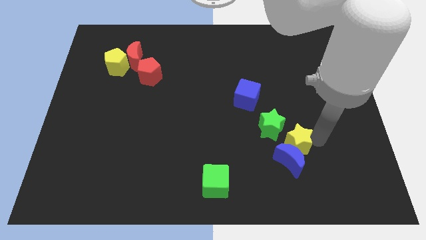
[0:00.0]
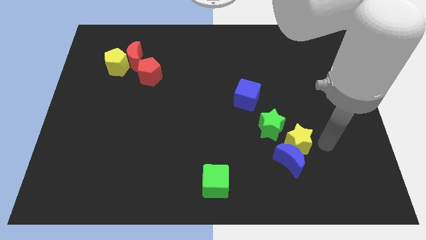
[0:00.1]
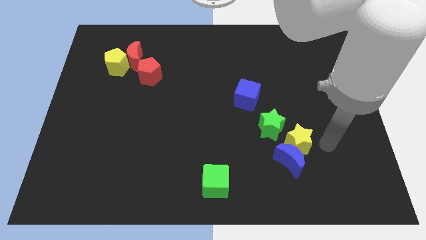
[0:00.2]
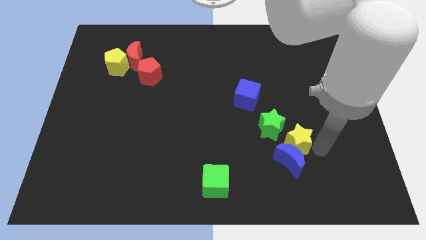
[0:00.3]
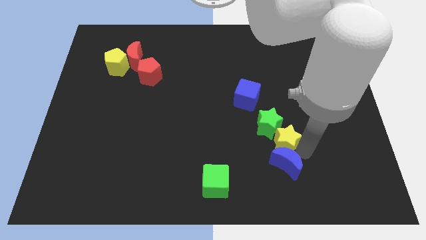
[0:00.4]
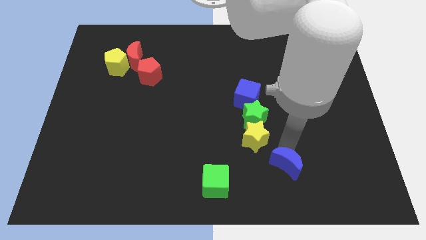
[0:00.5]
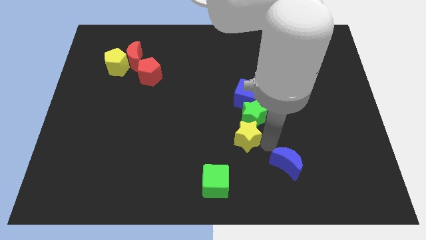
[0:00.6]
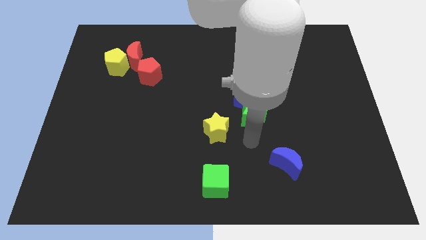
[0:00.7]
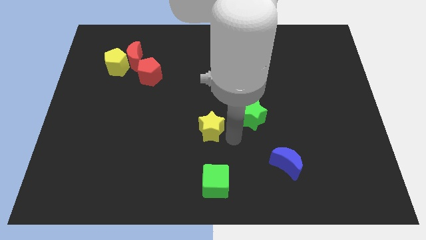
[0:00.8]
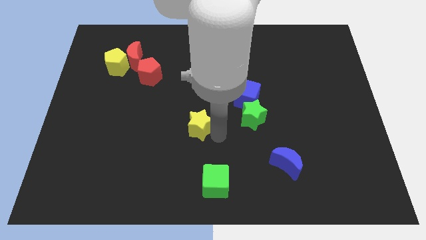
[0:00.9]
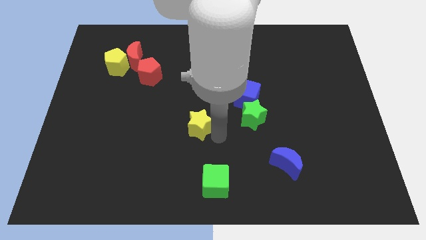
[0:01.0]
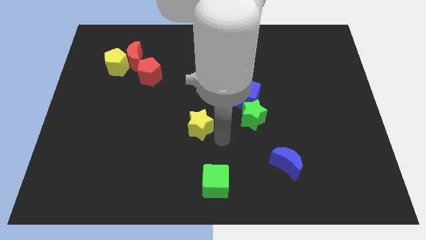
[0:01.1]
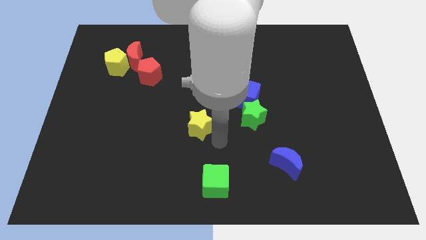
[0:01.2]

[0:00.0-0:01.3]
place yellow star to the left side of the green star

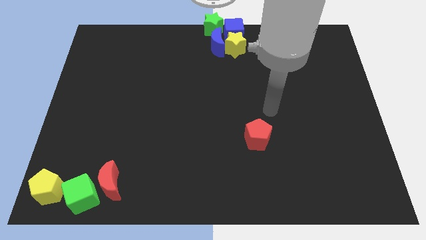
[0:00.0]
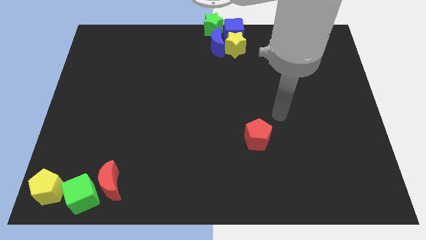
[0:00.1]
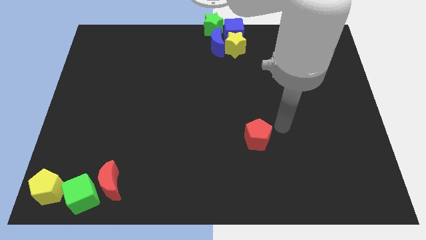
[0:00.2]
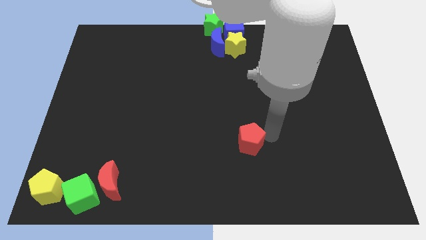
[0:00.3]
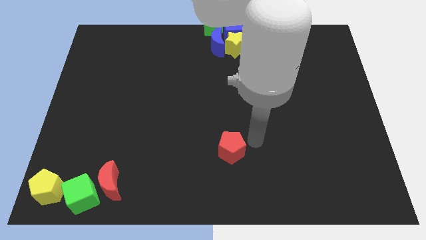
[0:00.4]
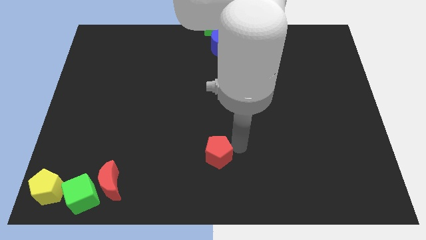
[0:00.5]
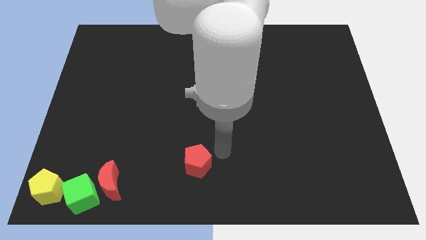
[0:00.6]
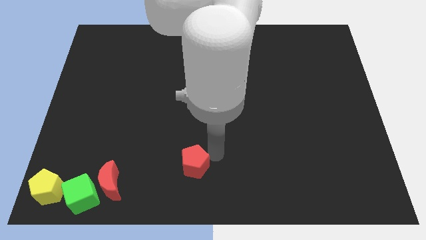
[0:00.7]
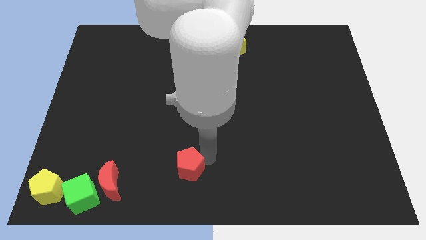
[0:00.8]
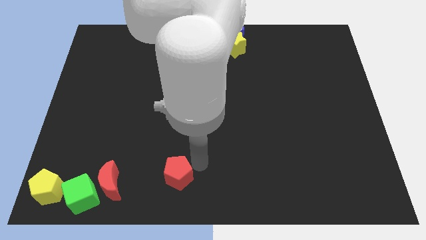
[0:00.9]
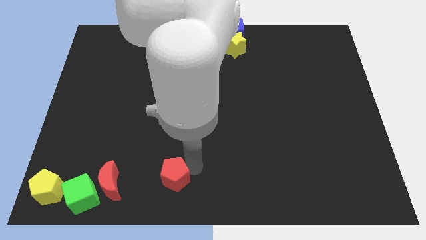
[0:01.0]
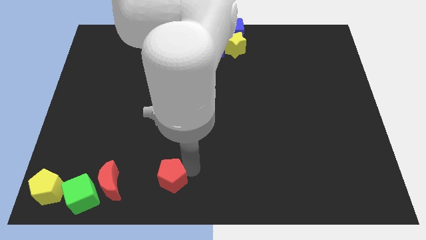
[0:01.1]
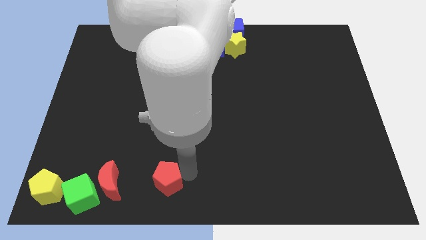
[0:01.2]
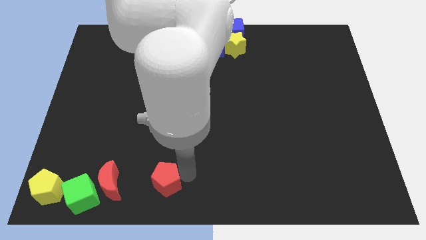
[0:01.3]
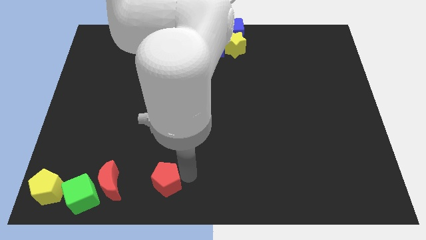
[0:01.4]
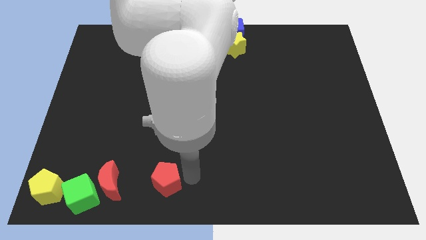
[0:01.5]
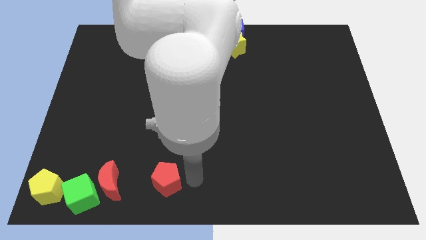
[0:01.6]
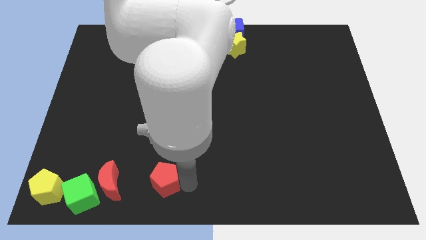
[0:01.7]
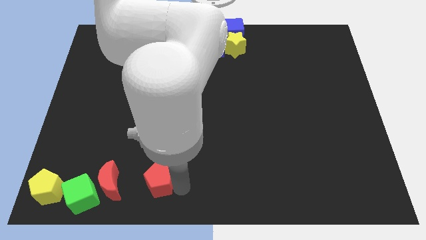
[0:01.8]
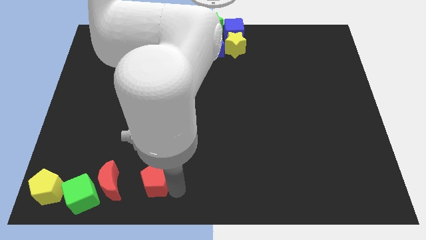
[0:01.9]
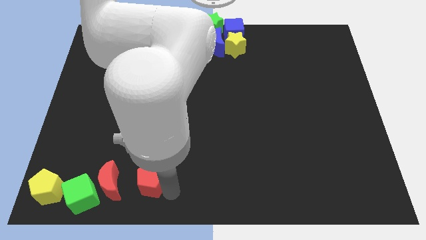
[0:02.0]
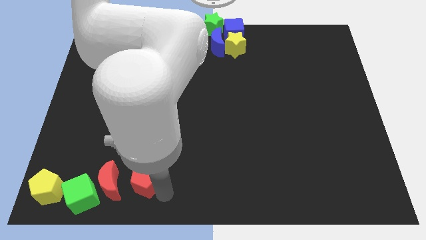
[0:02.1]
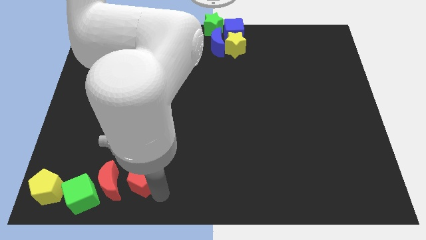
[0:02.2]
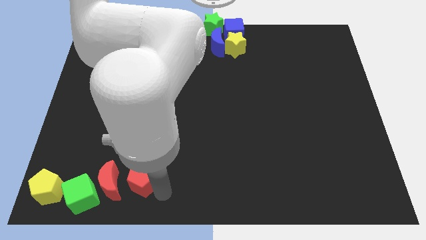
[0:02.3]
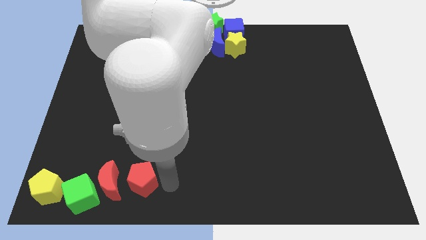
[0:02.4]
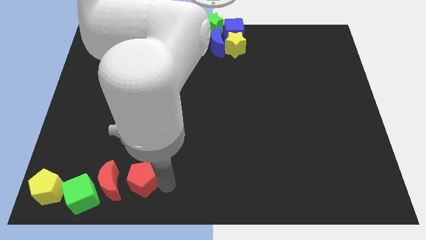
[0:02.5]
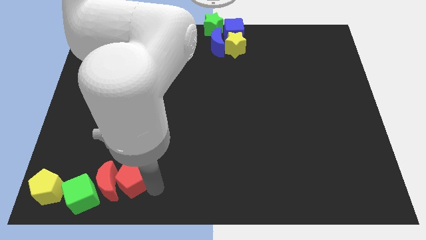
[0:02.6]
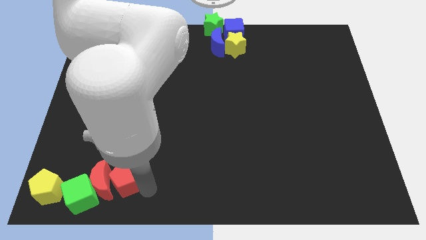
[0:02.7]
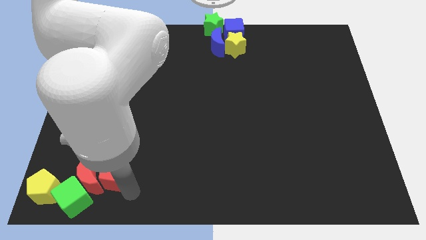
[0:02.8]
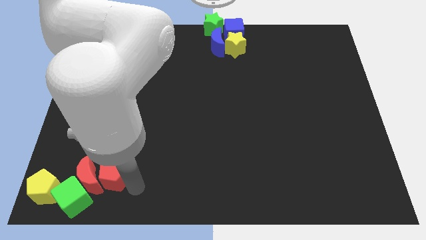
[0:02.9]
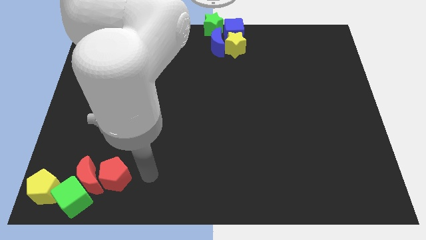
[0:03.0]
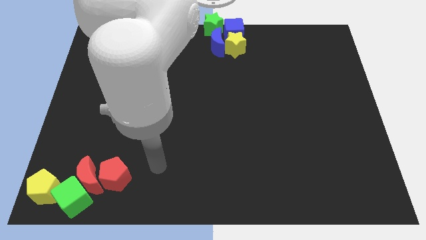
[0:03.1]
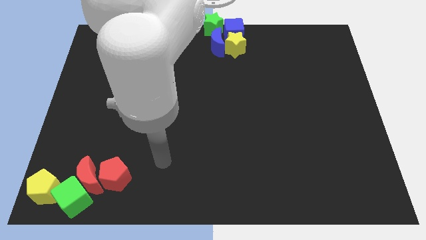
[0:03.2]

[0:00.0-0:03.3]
move the red pentagon to right of red moon

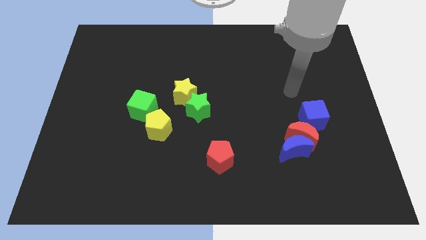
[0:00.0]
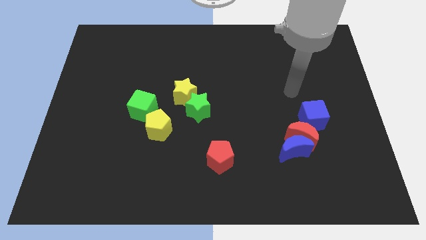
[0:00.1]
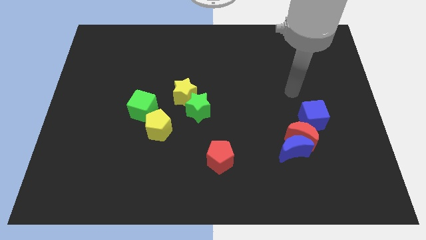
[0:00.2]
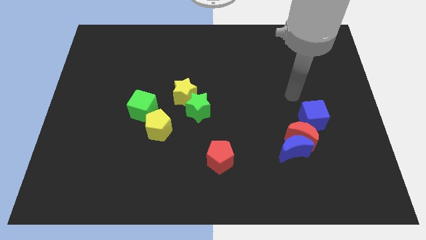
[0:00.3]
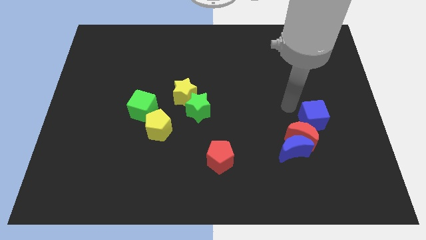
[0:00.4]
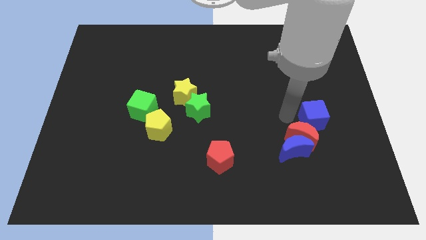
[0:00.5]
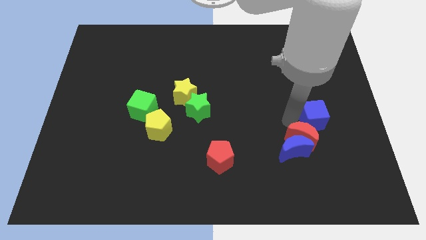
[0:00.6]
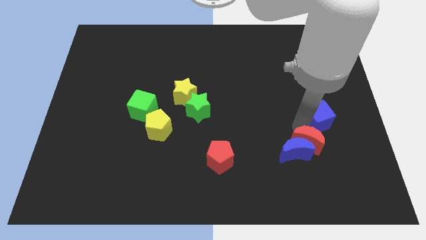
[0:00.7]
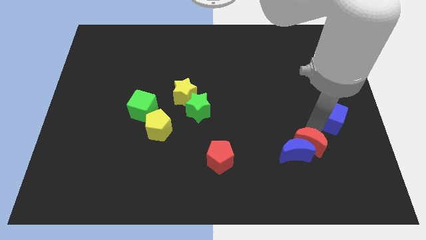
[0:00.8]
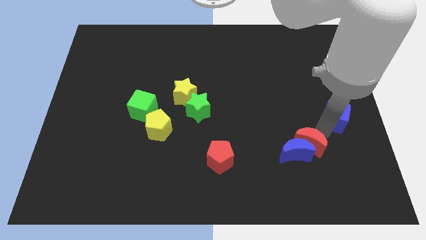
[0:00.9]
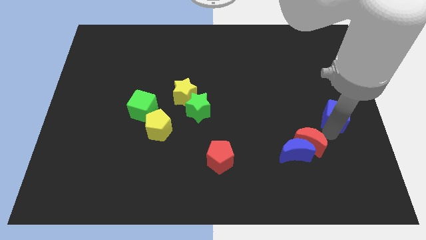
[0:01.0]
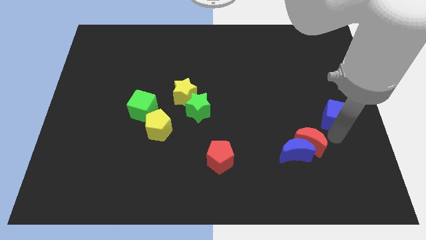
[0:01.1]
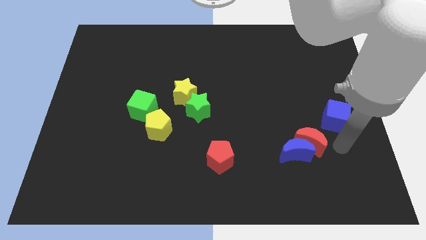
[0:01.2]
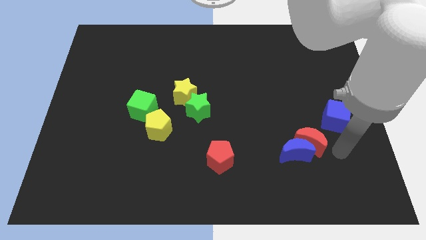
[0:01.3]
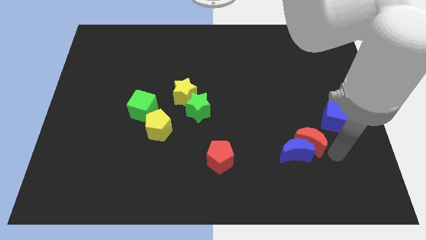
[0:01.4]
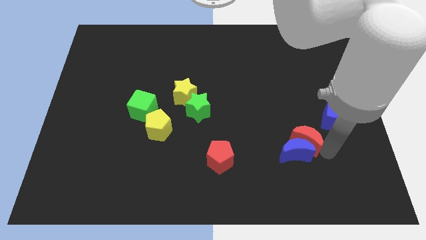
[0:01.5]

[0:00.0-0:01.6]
separate blue cube and red moon to the right bottom

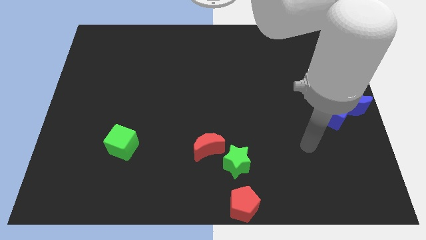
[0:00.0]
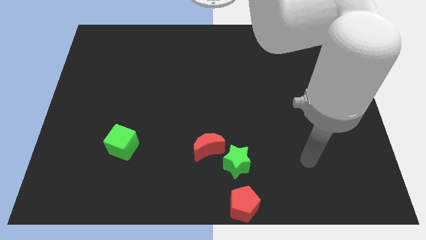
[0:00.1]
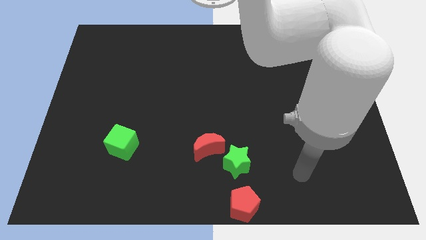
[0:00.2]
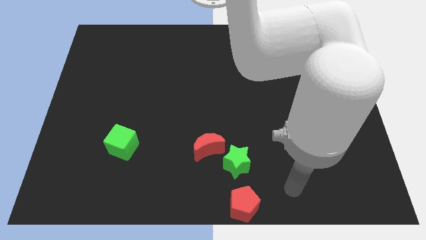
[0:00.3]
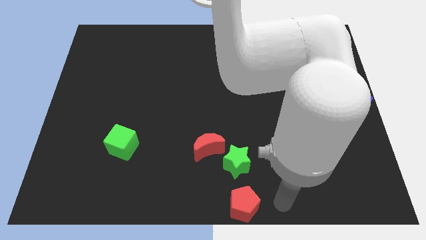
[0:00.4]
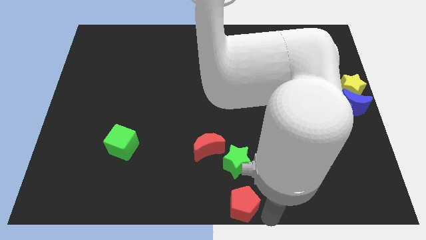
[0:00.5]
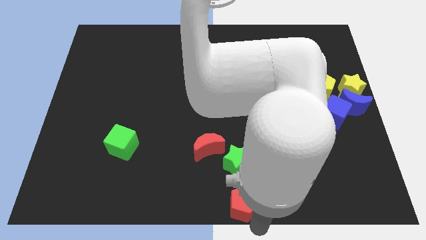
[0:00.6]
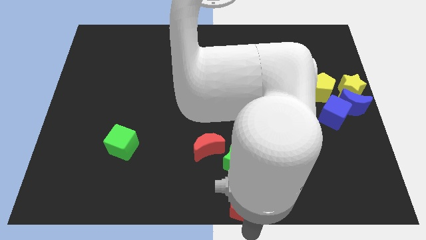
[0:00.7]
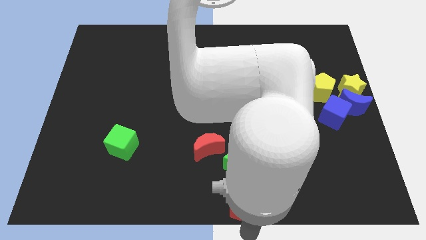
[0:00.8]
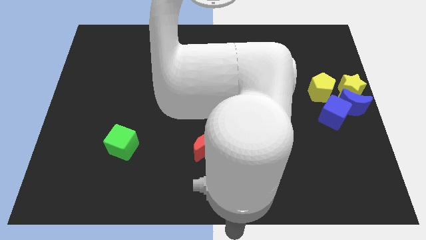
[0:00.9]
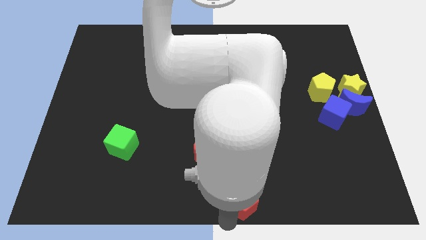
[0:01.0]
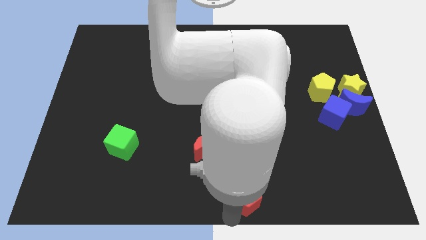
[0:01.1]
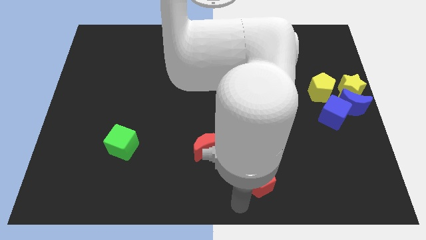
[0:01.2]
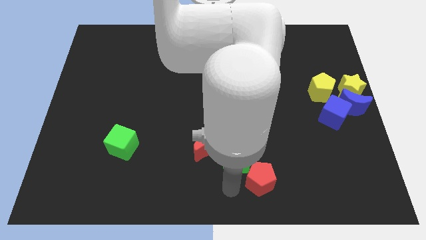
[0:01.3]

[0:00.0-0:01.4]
move the red pentagon to the bottom right of the green star

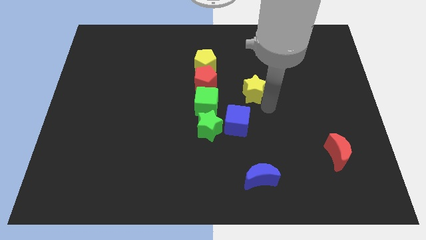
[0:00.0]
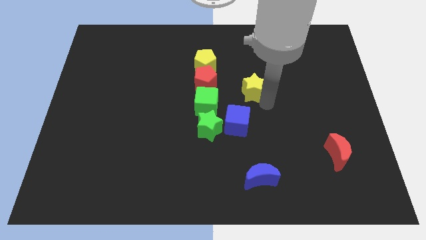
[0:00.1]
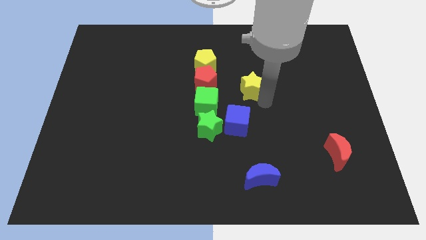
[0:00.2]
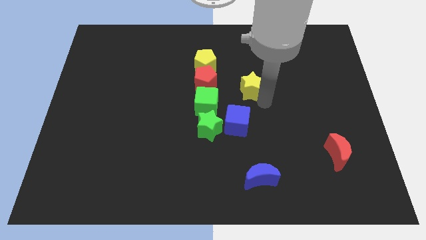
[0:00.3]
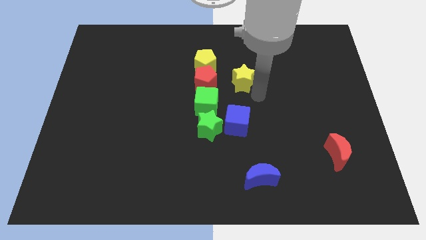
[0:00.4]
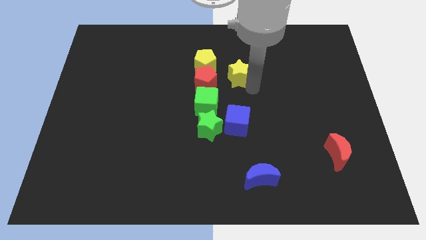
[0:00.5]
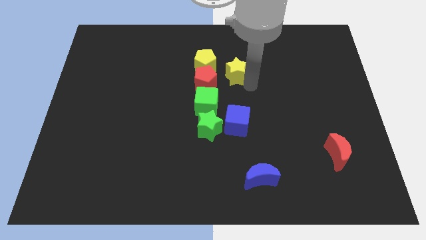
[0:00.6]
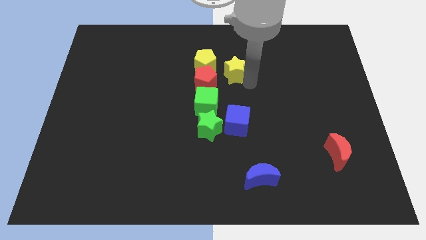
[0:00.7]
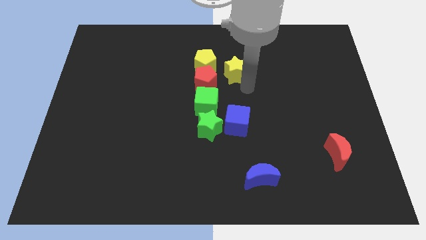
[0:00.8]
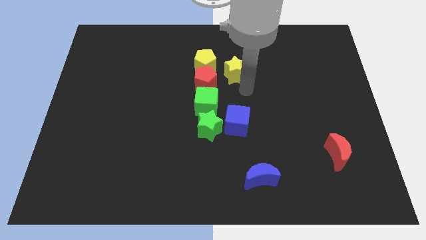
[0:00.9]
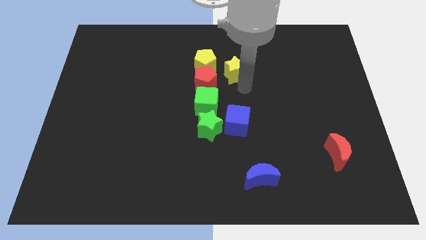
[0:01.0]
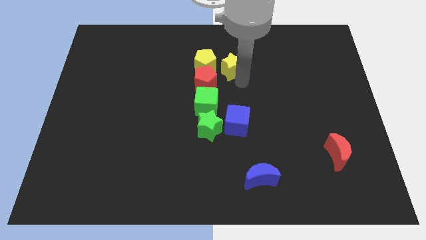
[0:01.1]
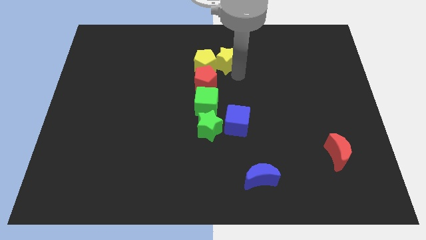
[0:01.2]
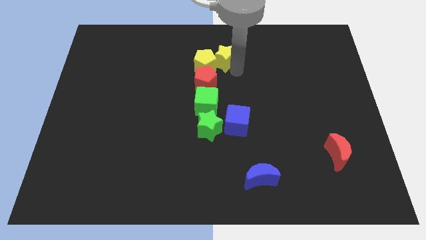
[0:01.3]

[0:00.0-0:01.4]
place yellow star to the right of yellow pentagon
